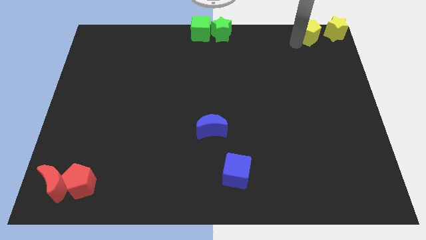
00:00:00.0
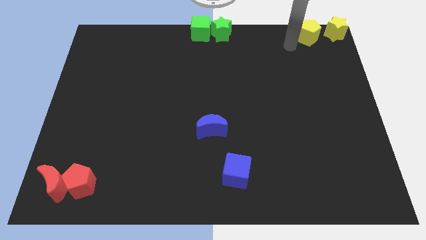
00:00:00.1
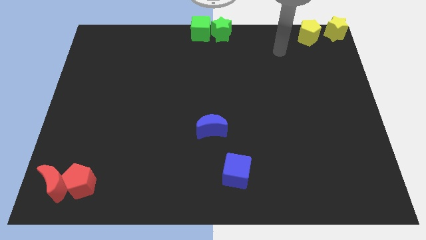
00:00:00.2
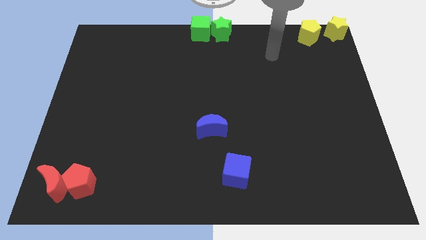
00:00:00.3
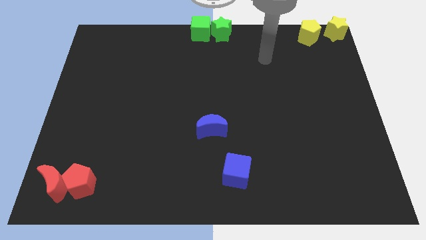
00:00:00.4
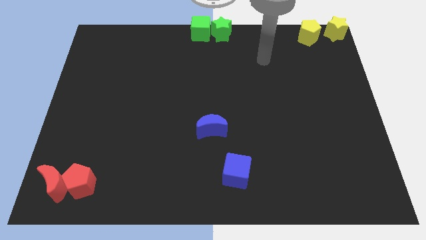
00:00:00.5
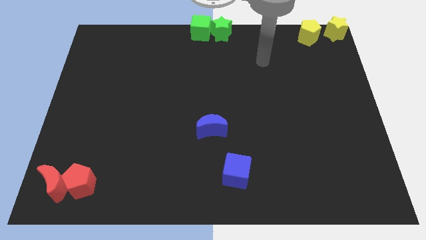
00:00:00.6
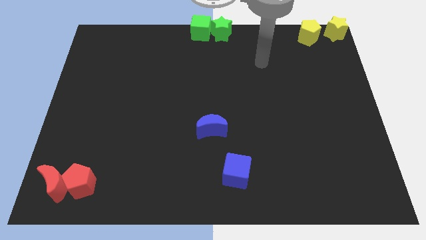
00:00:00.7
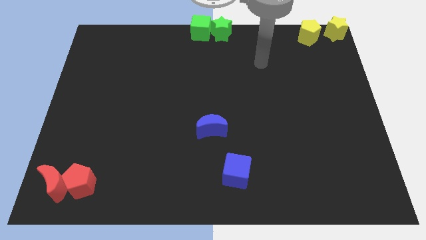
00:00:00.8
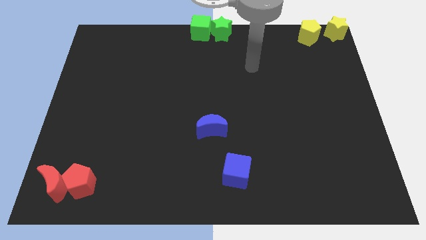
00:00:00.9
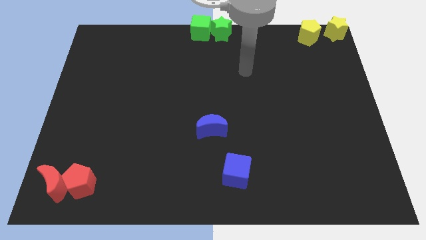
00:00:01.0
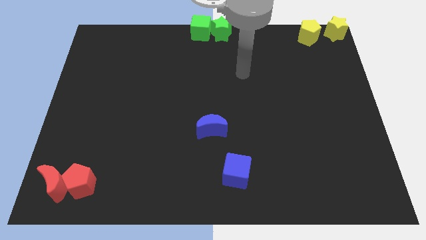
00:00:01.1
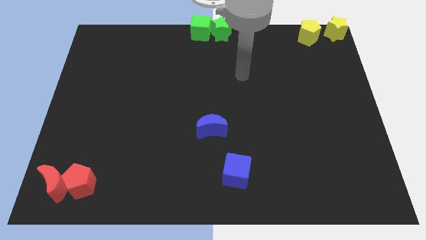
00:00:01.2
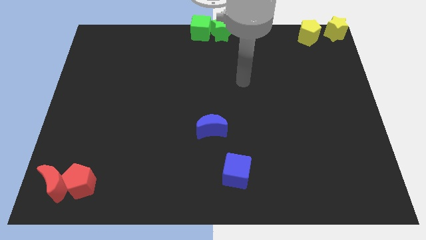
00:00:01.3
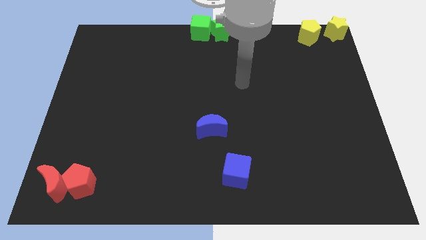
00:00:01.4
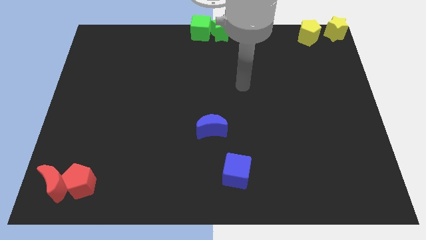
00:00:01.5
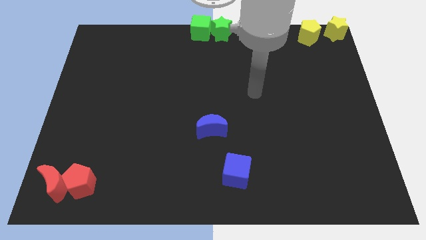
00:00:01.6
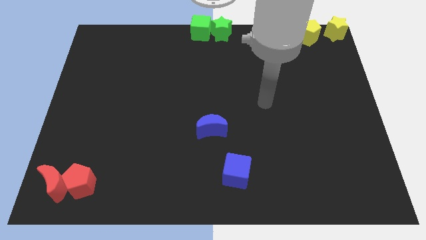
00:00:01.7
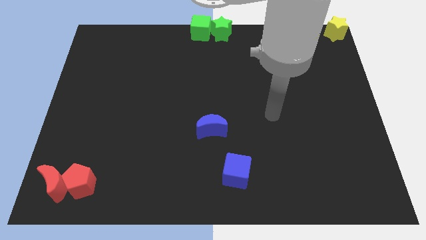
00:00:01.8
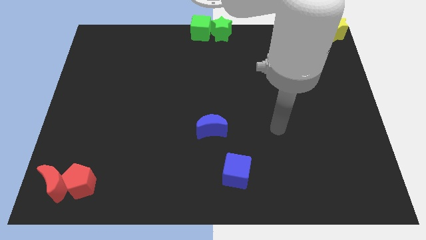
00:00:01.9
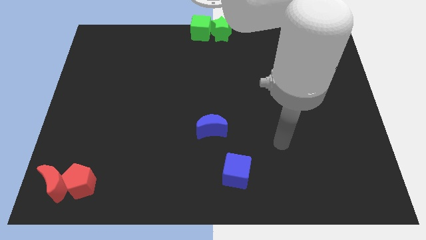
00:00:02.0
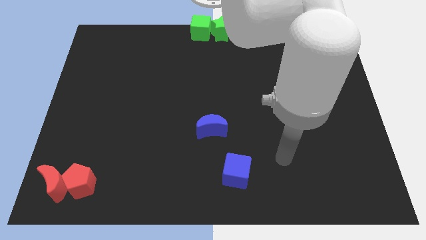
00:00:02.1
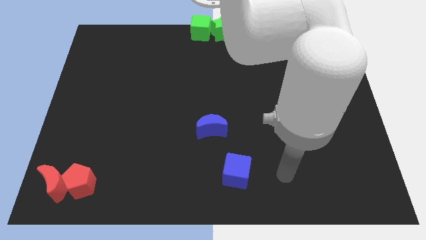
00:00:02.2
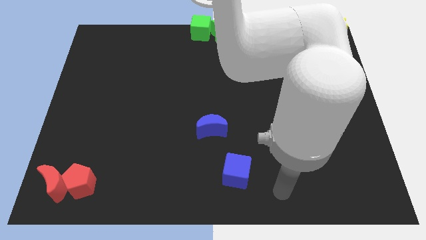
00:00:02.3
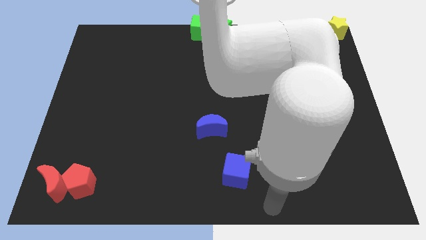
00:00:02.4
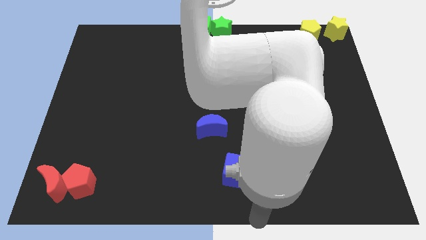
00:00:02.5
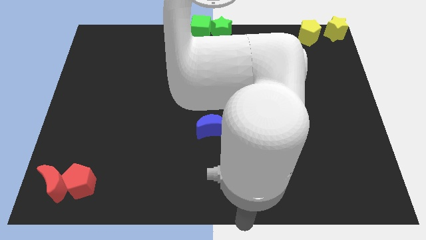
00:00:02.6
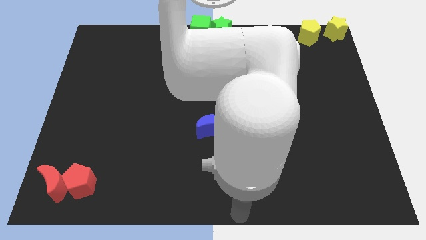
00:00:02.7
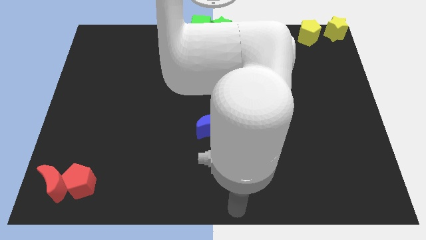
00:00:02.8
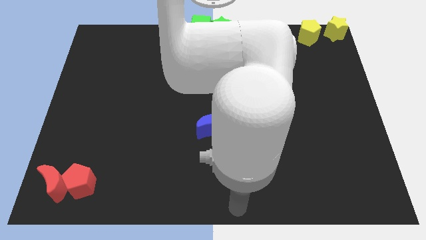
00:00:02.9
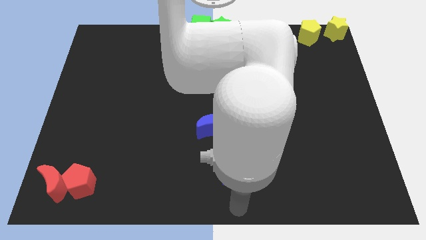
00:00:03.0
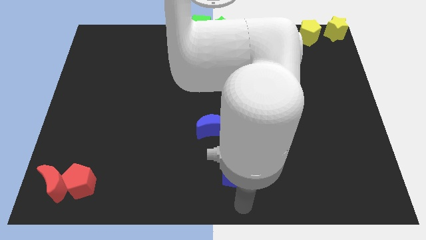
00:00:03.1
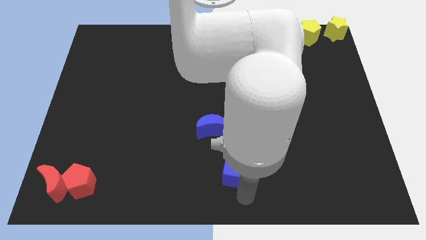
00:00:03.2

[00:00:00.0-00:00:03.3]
place the arm down to the blue cube

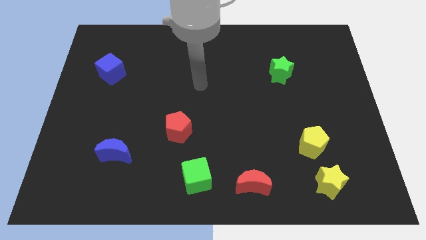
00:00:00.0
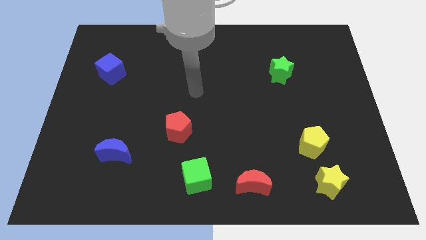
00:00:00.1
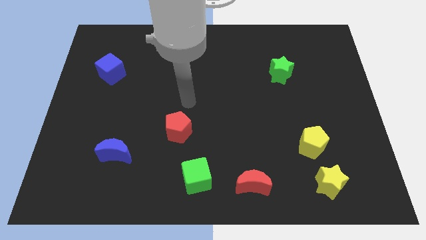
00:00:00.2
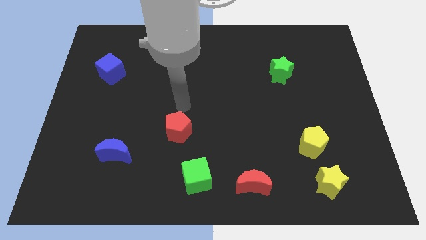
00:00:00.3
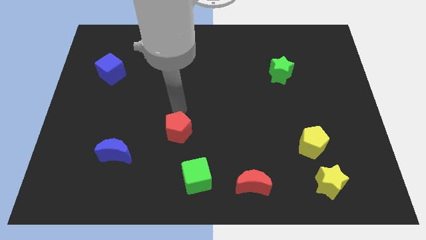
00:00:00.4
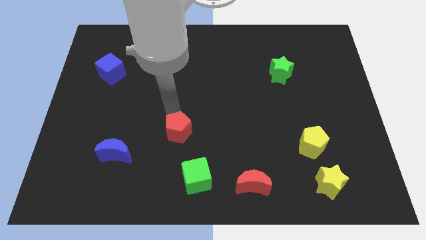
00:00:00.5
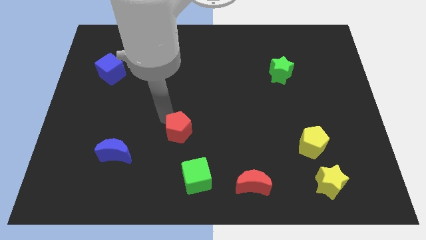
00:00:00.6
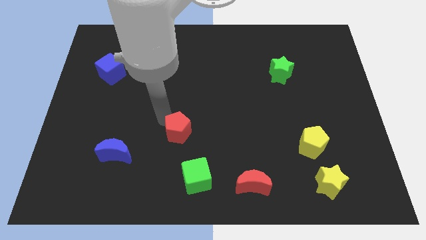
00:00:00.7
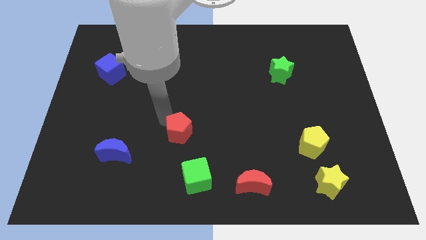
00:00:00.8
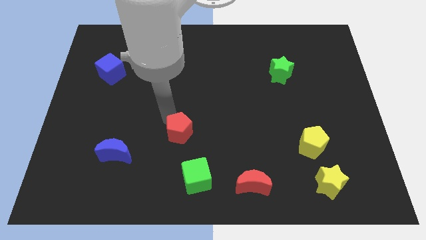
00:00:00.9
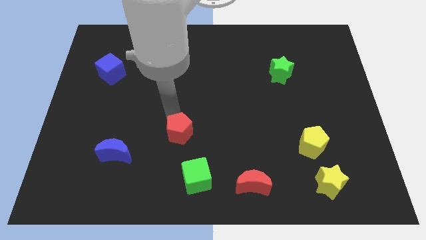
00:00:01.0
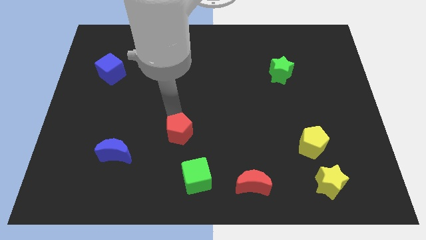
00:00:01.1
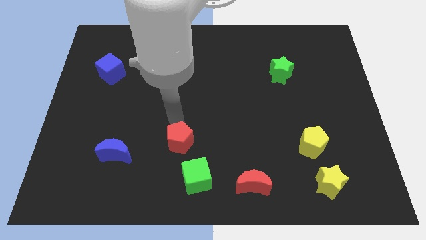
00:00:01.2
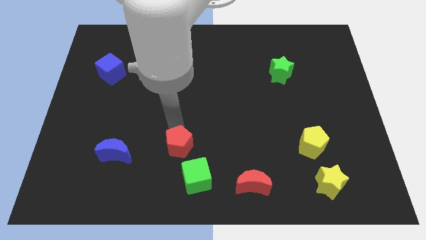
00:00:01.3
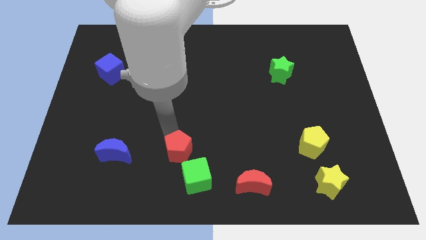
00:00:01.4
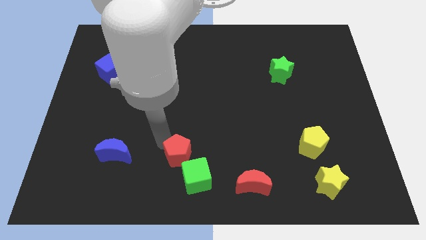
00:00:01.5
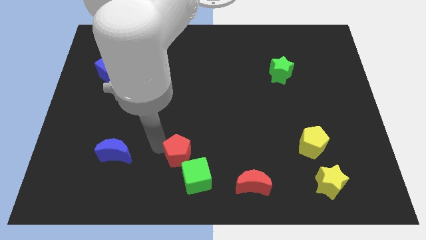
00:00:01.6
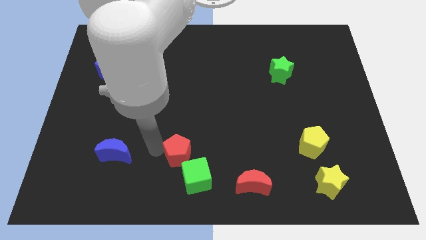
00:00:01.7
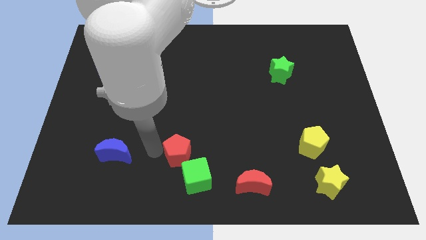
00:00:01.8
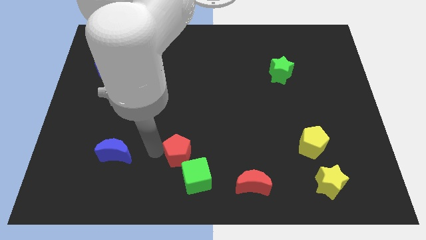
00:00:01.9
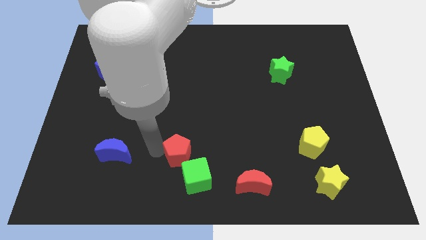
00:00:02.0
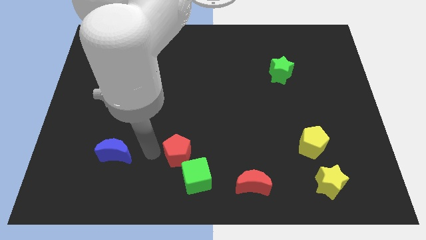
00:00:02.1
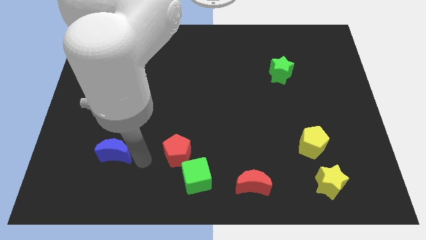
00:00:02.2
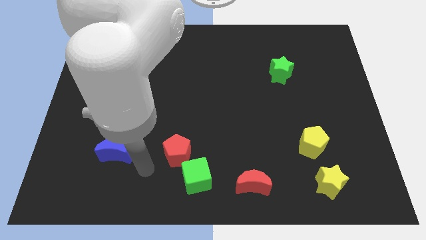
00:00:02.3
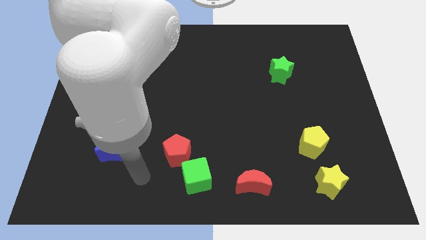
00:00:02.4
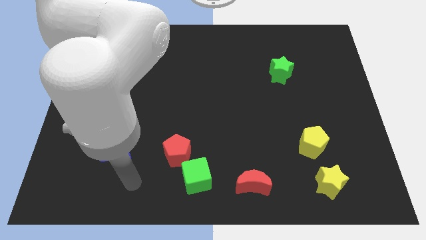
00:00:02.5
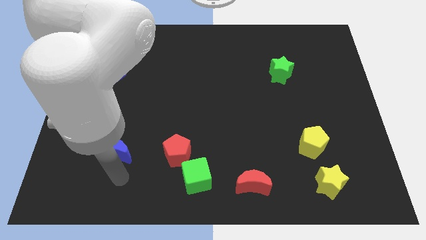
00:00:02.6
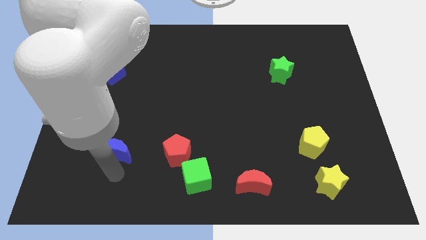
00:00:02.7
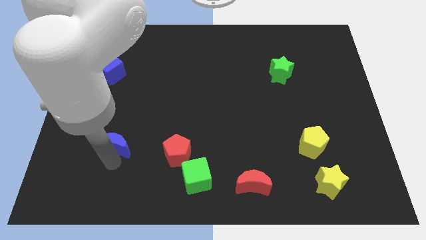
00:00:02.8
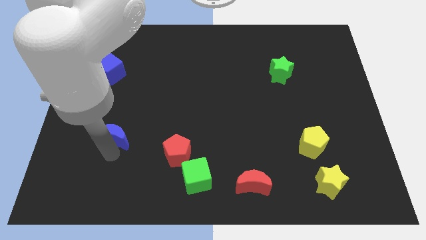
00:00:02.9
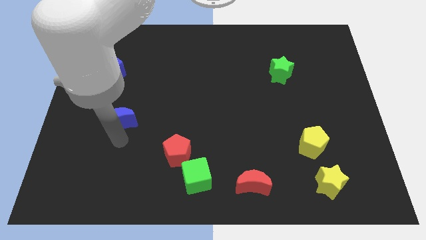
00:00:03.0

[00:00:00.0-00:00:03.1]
put the red pentagon at the top side of the green cube

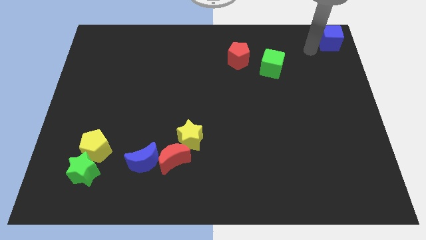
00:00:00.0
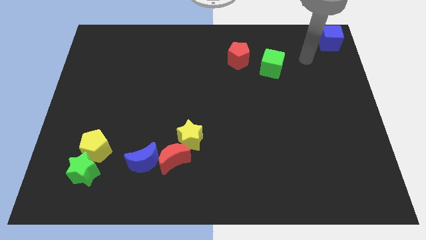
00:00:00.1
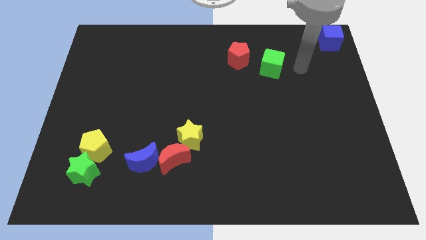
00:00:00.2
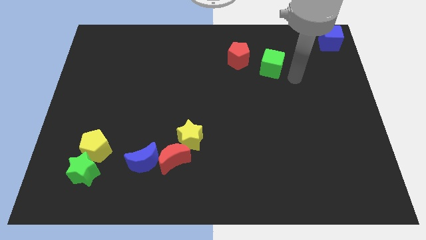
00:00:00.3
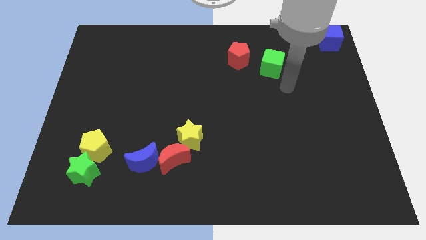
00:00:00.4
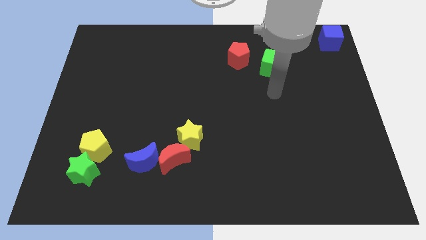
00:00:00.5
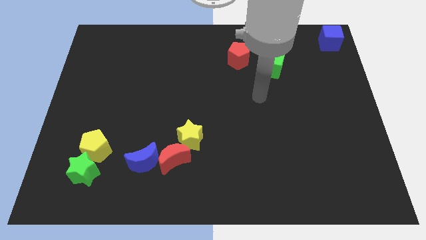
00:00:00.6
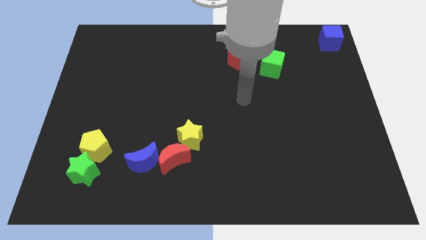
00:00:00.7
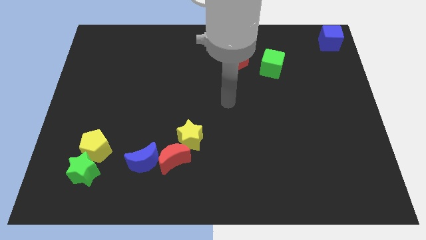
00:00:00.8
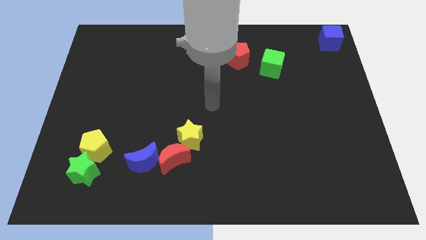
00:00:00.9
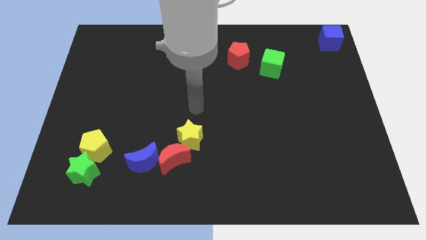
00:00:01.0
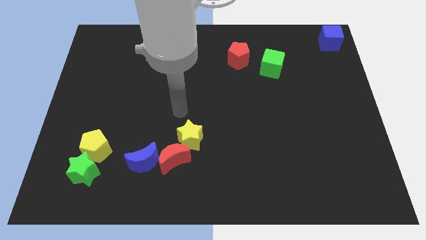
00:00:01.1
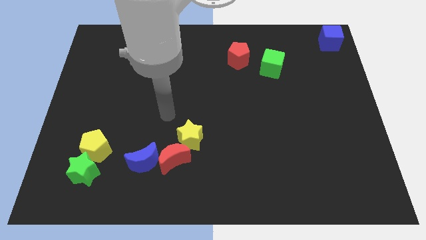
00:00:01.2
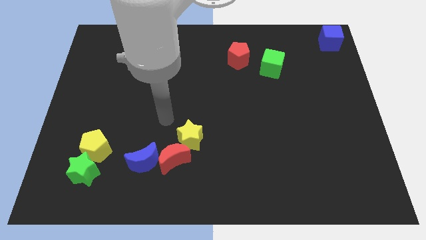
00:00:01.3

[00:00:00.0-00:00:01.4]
move your arm away from blue cube

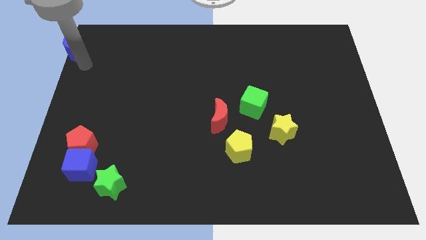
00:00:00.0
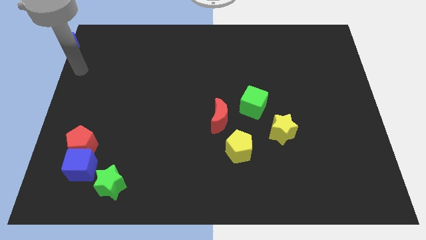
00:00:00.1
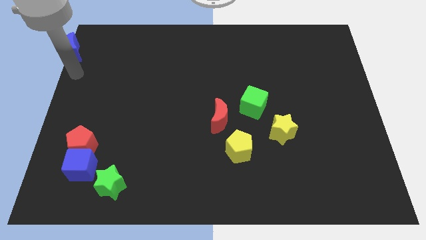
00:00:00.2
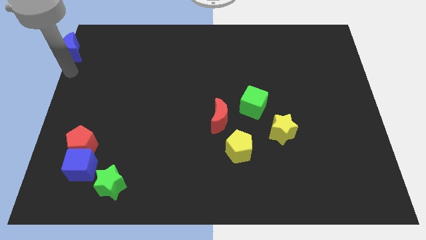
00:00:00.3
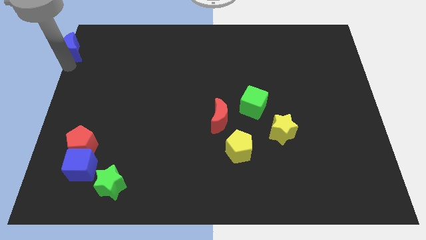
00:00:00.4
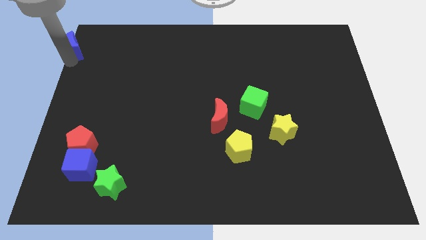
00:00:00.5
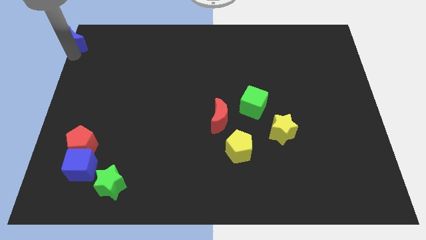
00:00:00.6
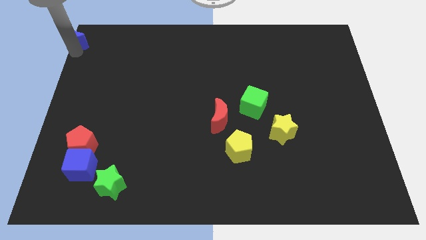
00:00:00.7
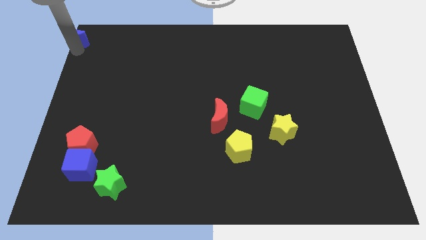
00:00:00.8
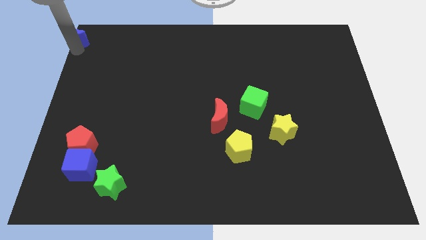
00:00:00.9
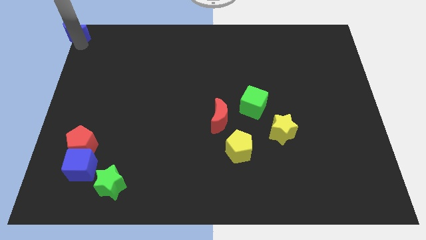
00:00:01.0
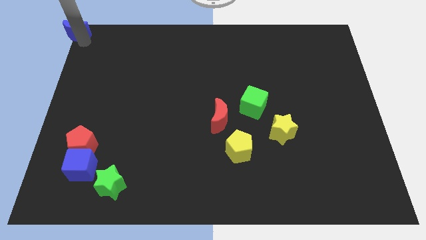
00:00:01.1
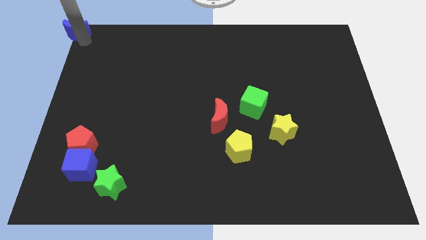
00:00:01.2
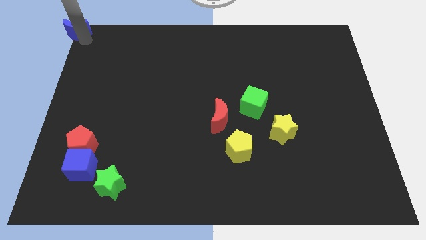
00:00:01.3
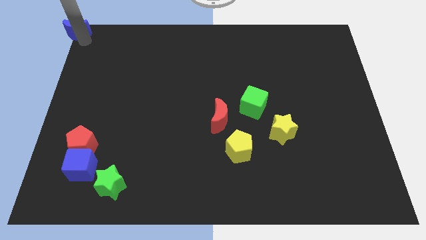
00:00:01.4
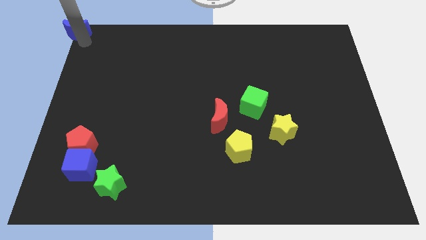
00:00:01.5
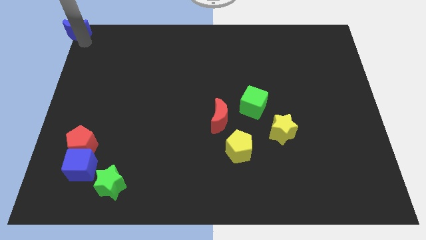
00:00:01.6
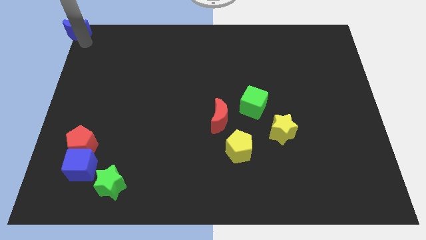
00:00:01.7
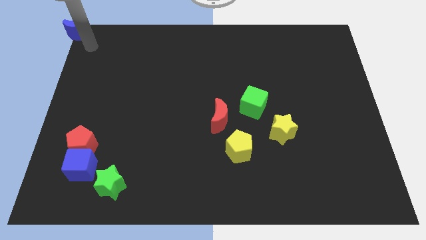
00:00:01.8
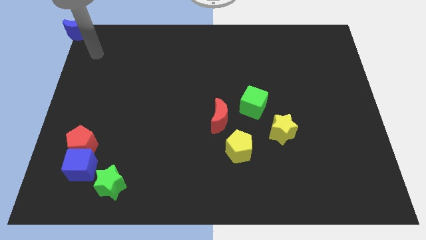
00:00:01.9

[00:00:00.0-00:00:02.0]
move the blue crescent to the top left corner of the board
